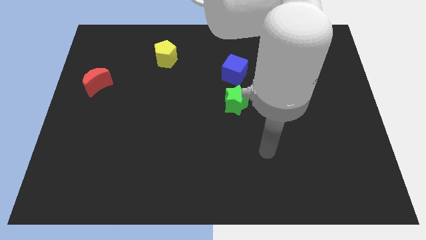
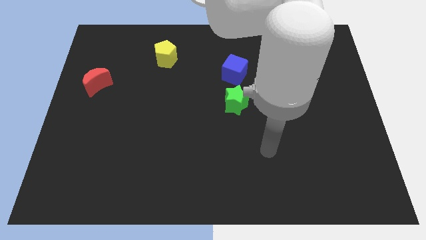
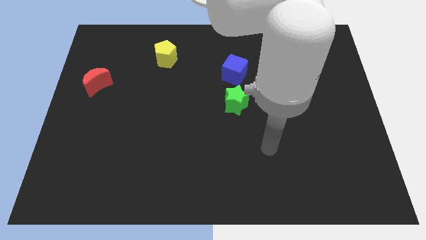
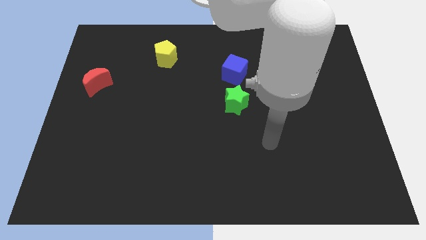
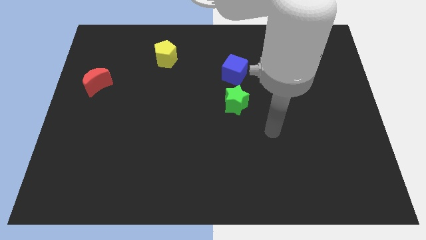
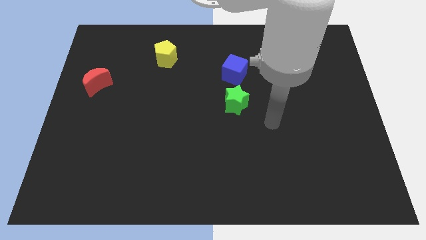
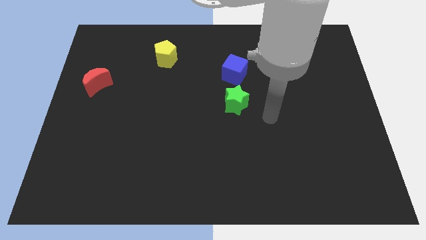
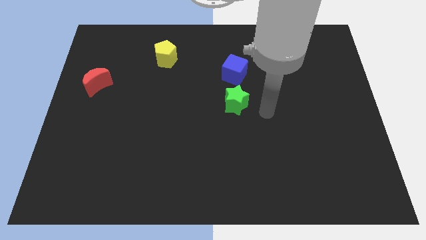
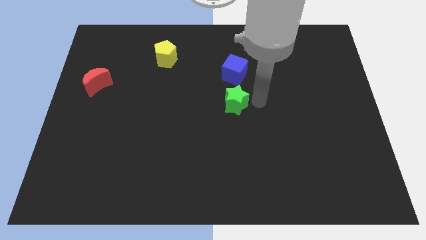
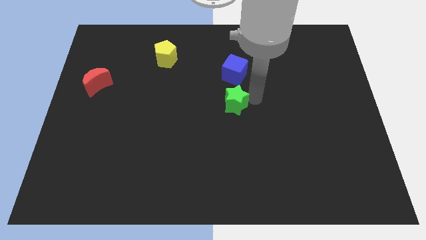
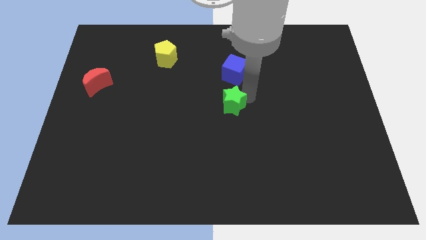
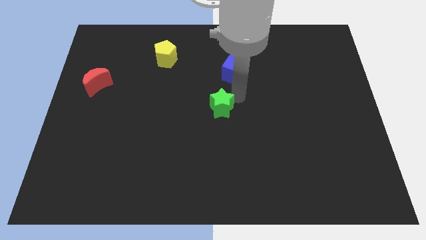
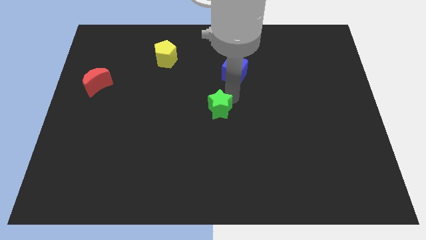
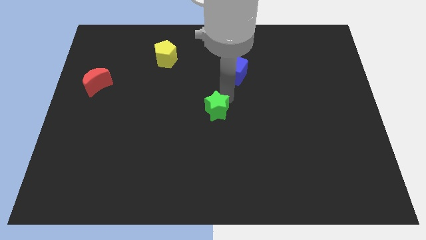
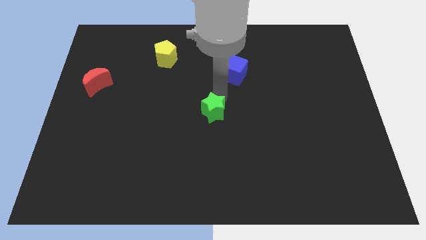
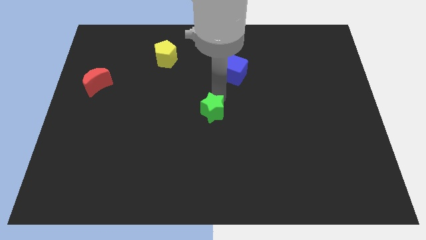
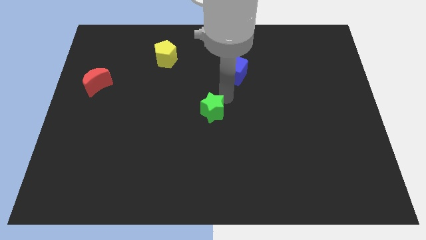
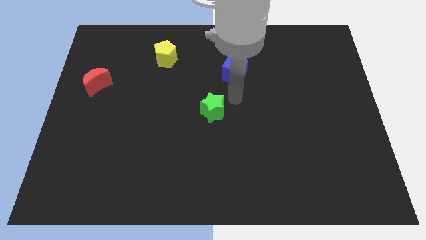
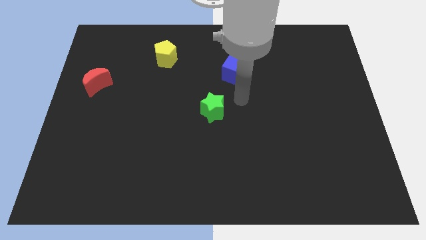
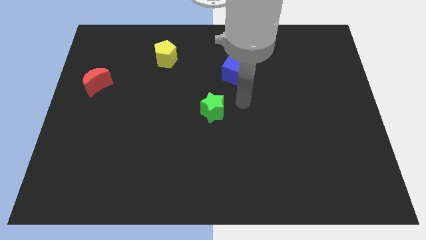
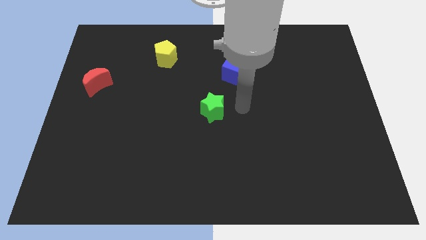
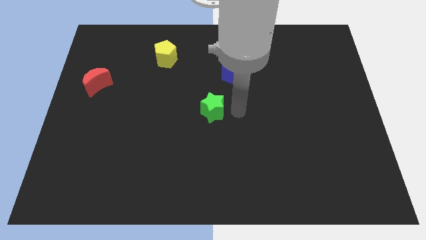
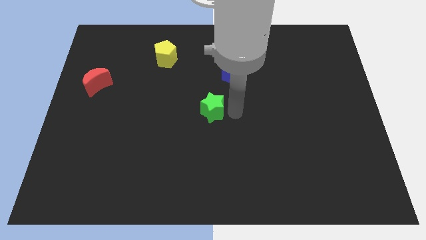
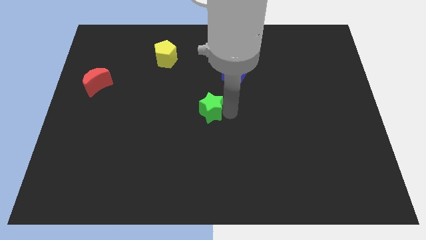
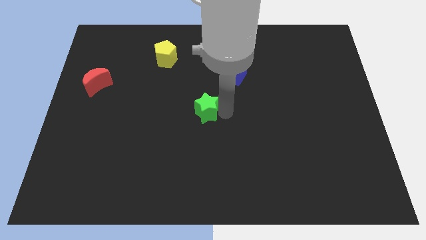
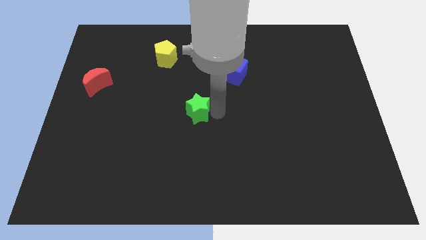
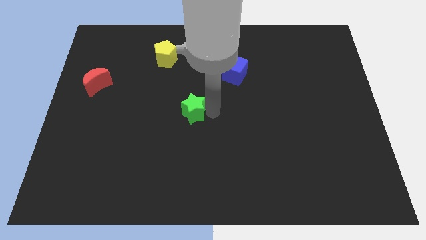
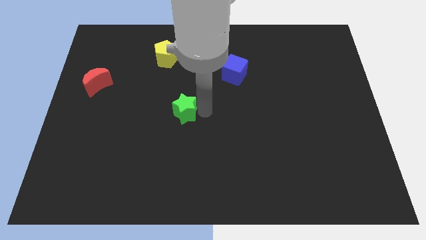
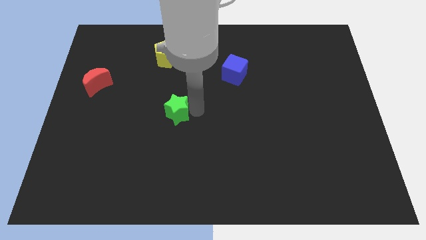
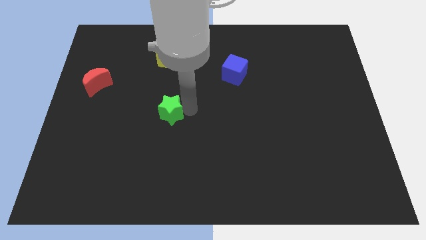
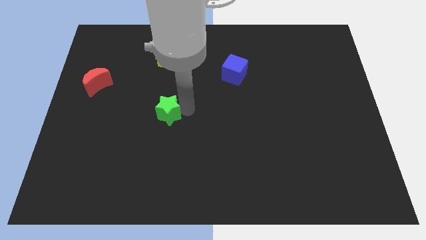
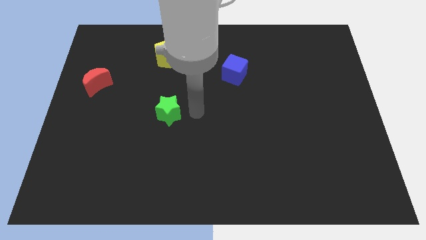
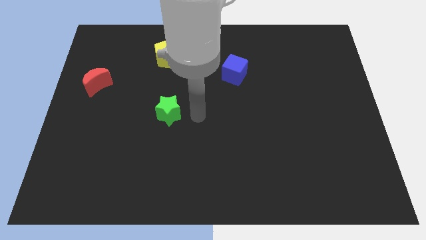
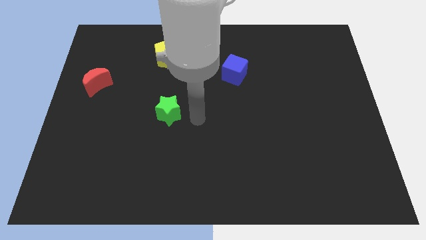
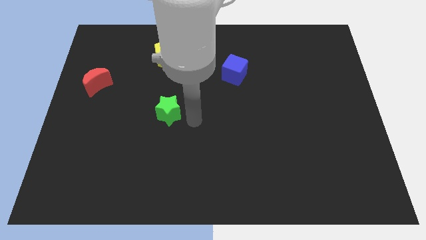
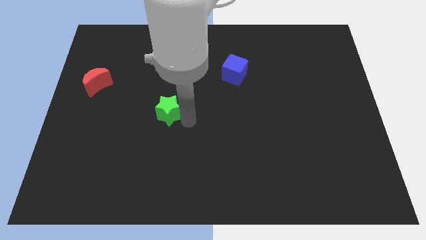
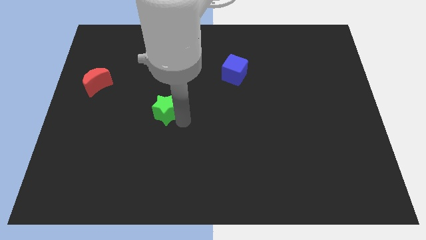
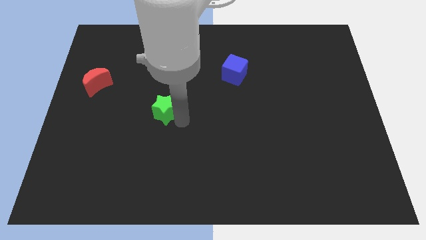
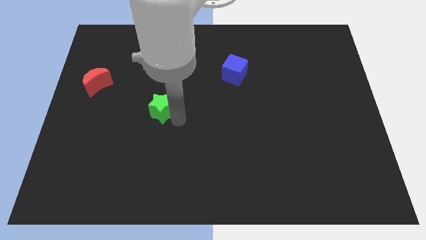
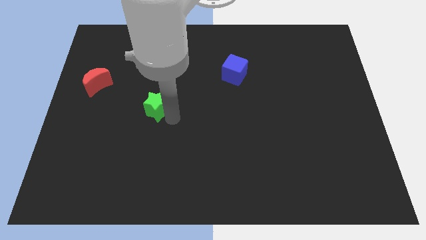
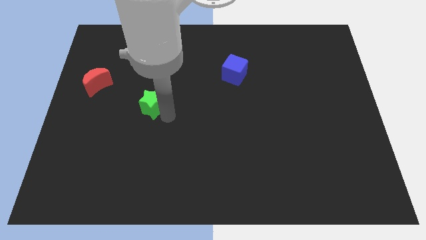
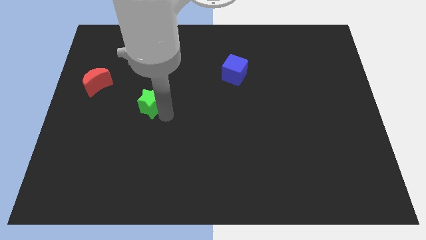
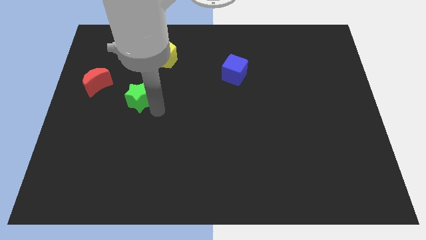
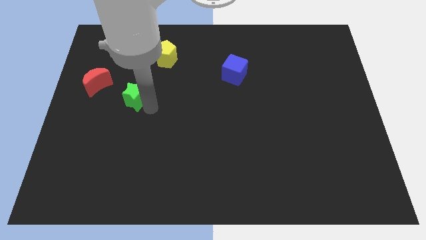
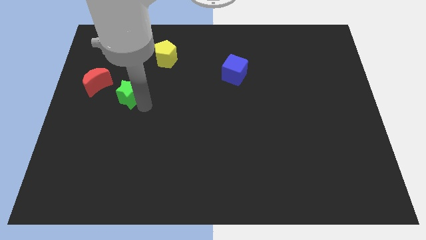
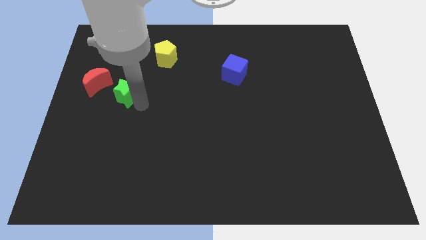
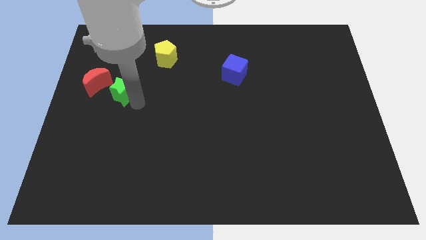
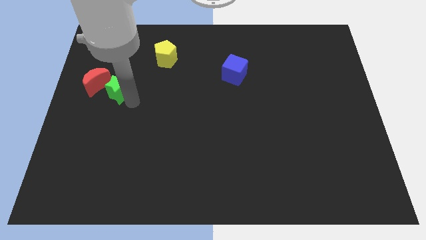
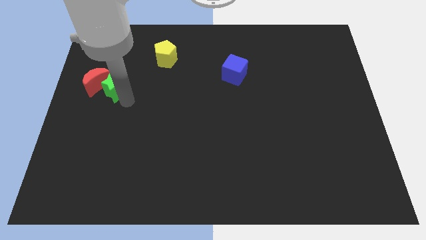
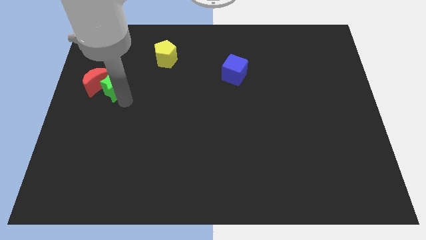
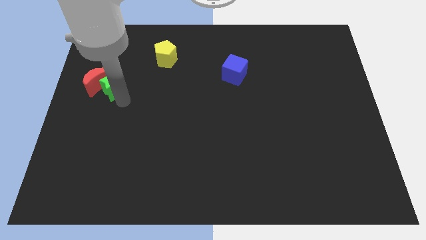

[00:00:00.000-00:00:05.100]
put the star to the red block

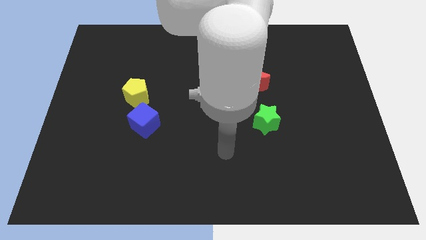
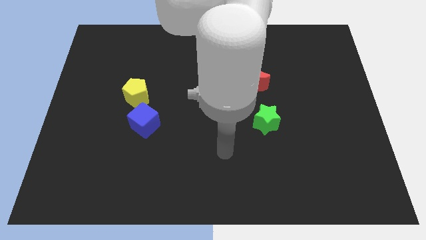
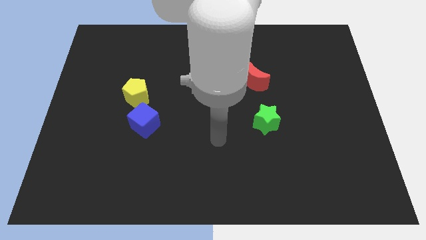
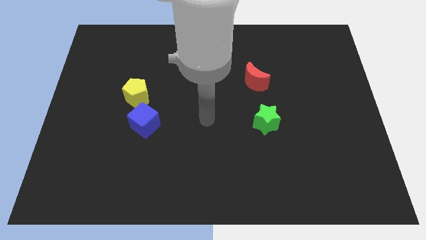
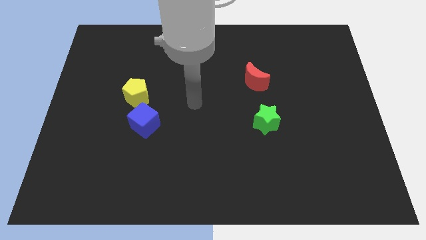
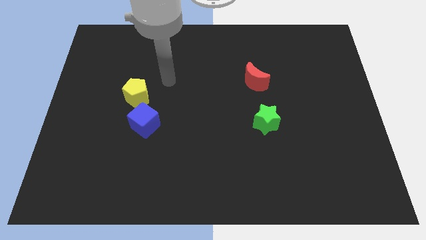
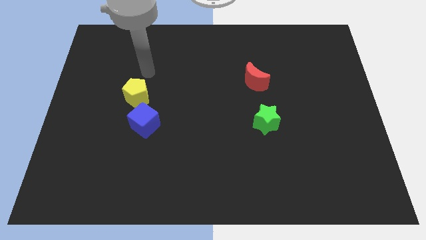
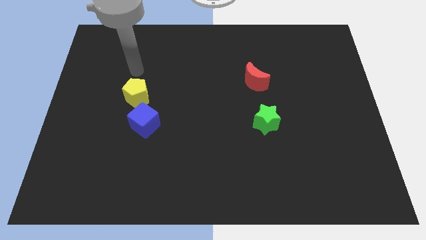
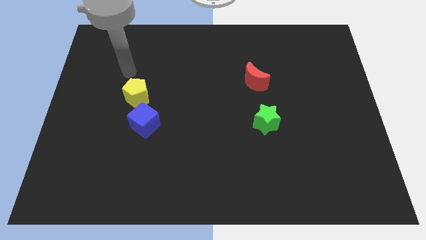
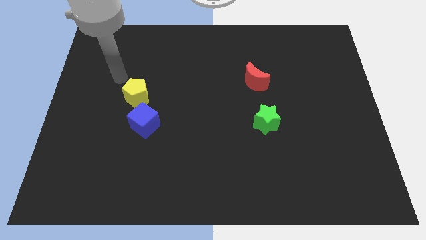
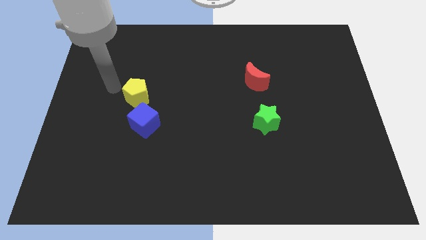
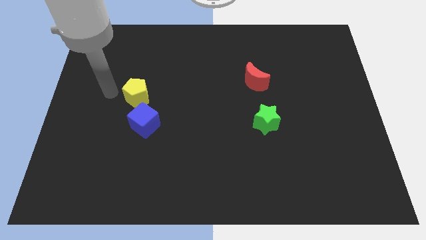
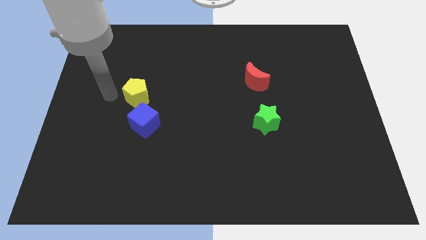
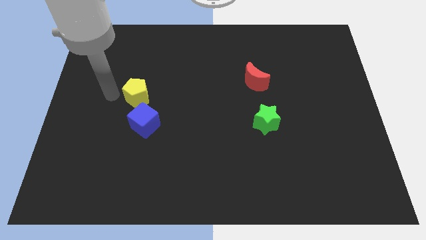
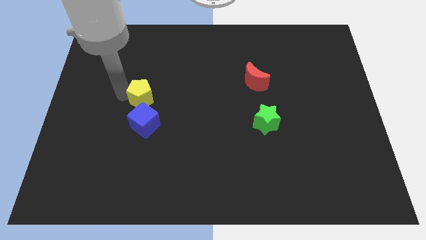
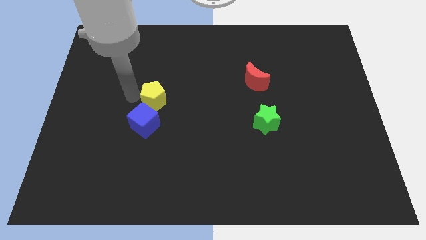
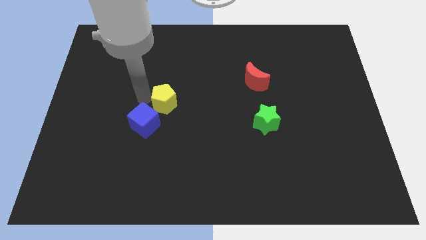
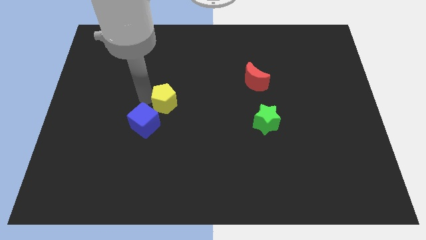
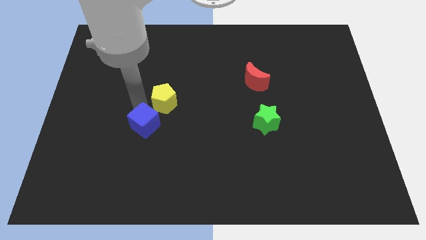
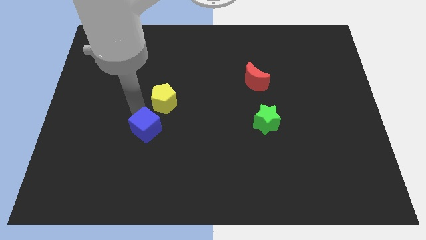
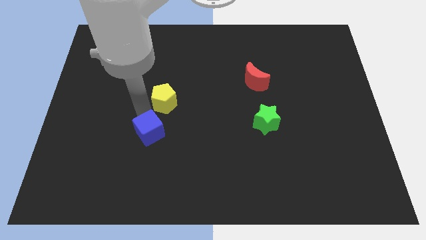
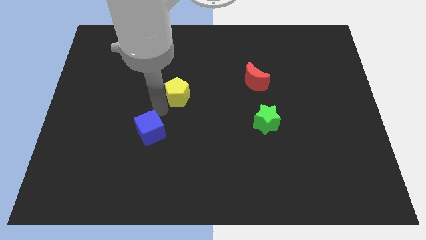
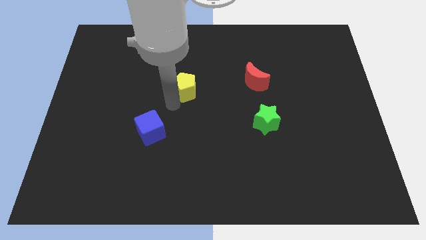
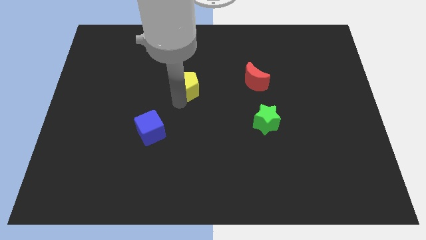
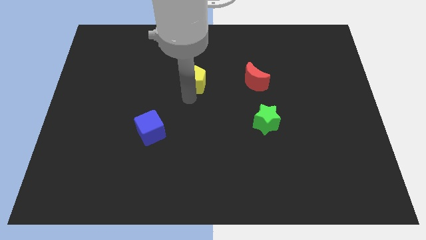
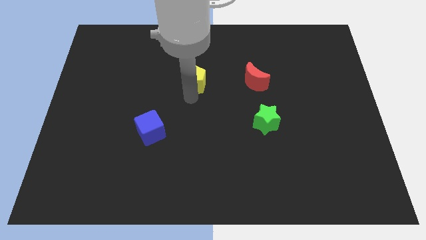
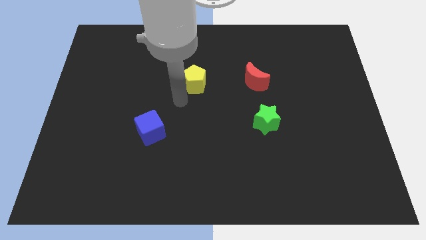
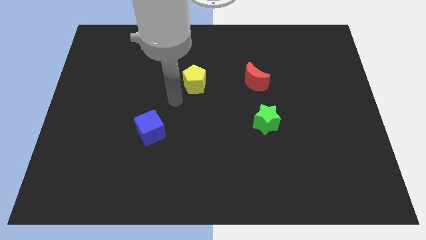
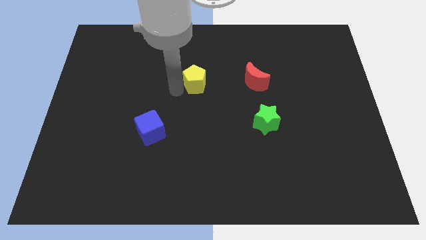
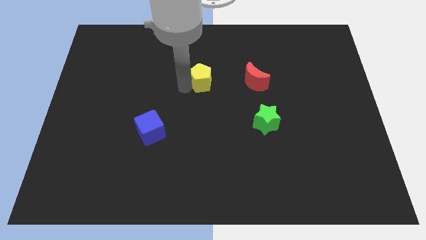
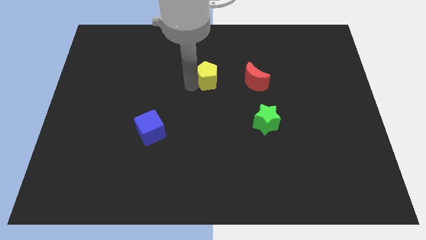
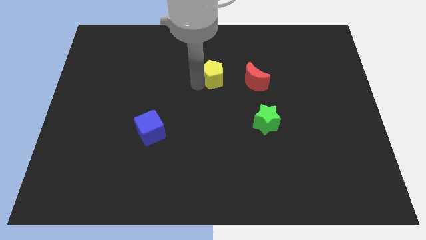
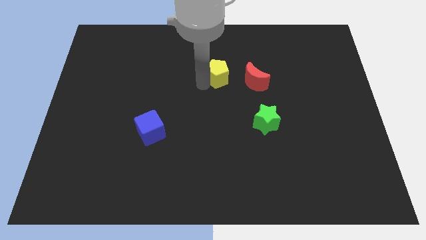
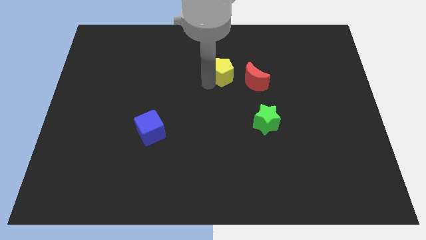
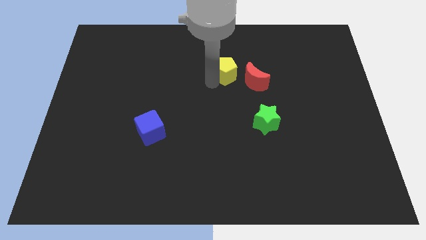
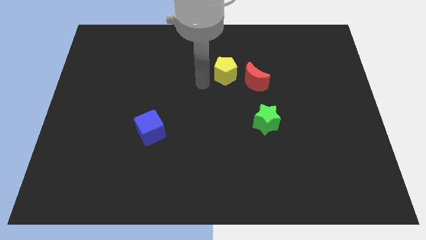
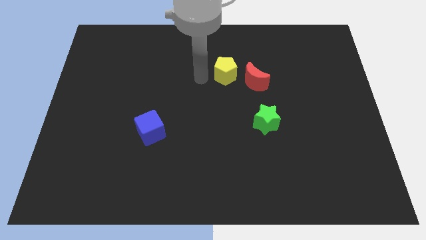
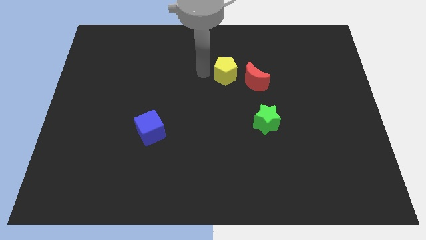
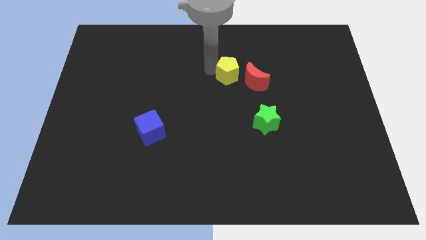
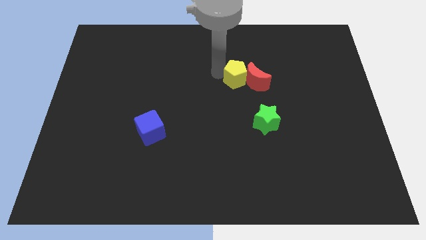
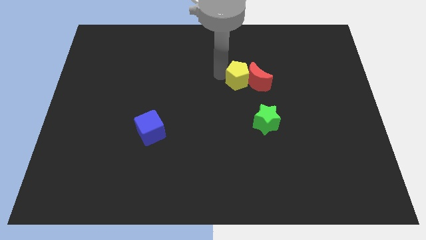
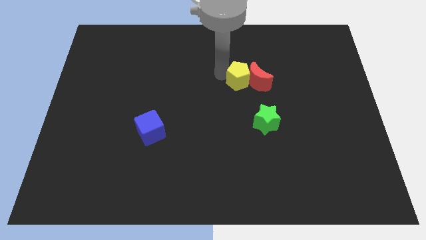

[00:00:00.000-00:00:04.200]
move the yellow pentagon close to the red block
